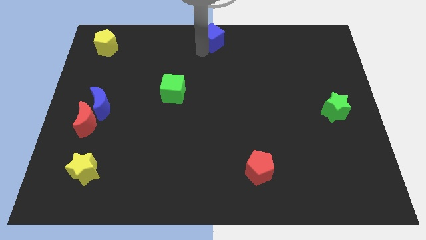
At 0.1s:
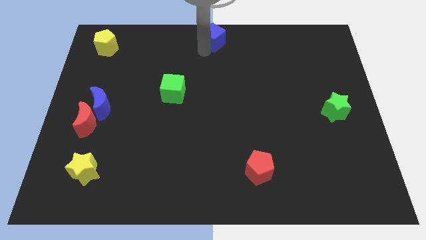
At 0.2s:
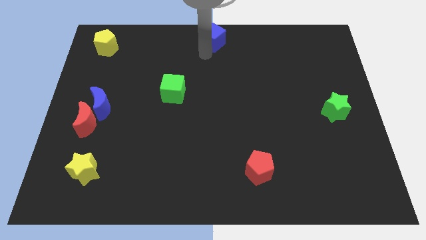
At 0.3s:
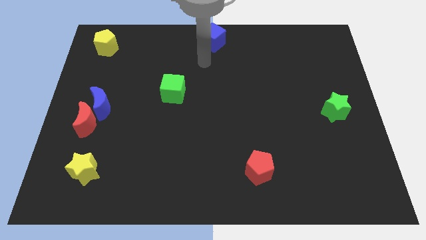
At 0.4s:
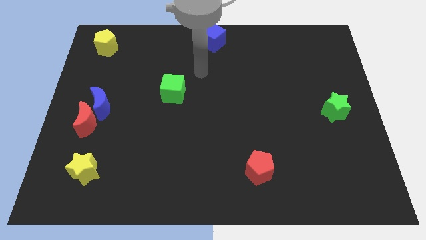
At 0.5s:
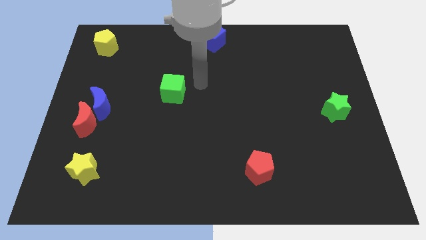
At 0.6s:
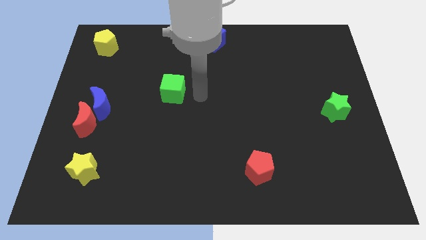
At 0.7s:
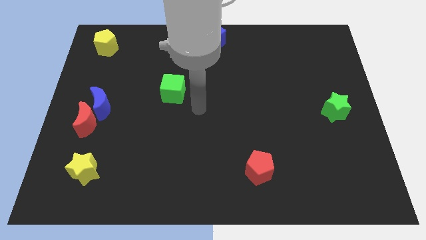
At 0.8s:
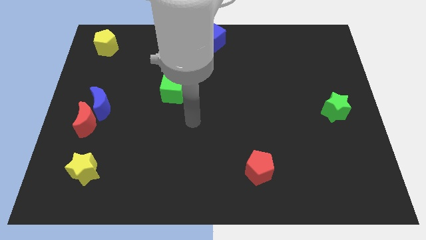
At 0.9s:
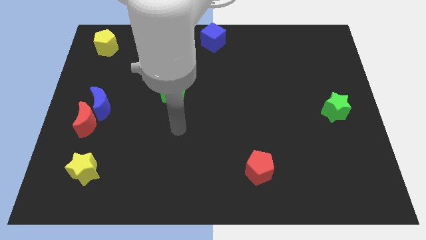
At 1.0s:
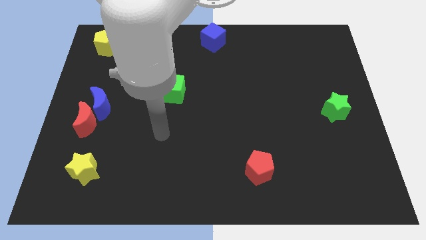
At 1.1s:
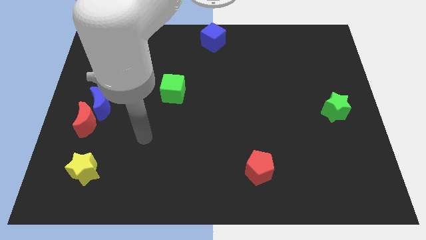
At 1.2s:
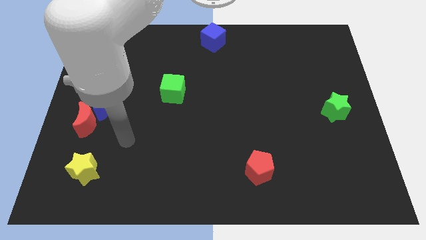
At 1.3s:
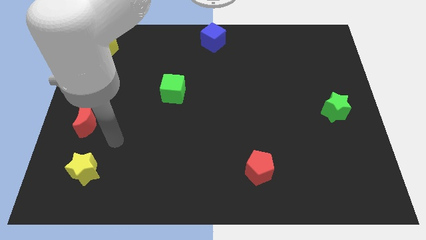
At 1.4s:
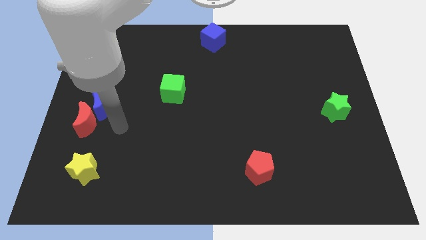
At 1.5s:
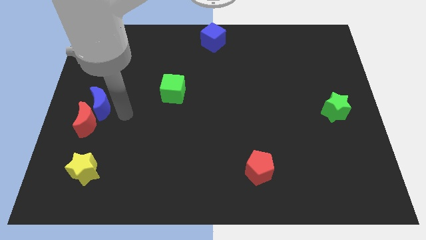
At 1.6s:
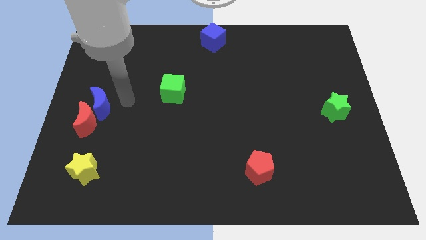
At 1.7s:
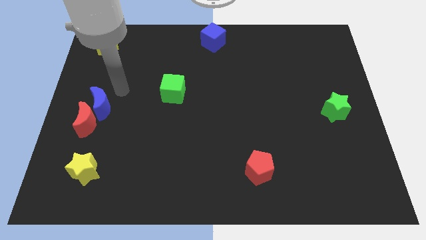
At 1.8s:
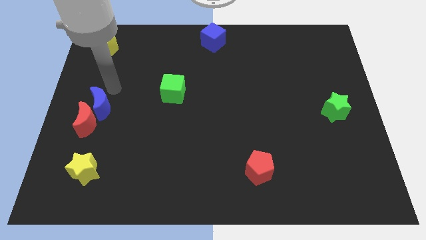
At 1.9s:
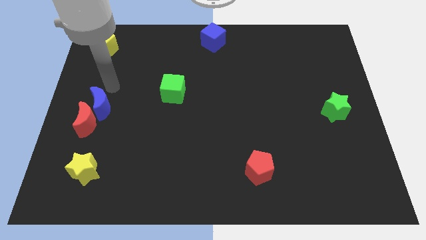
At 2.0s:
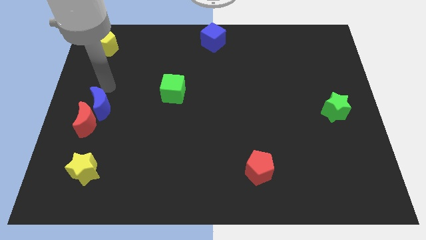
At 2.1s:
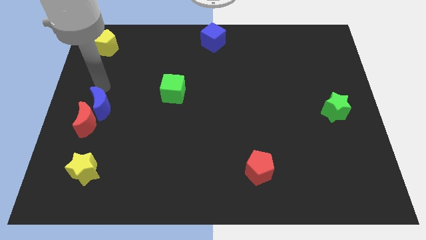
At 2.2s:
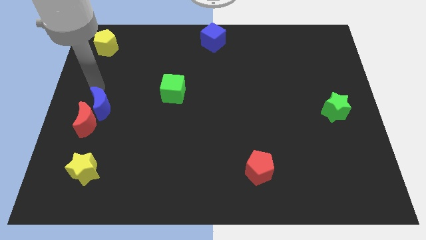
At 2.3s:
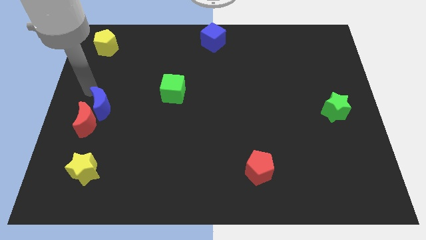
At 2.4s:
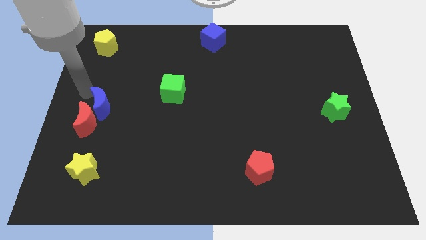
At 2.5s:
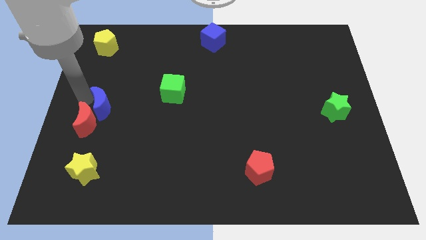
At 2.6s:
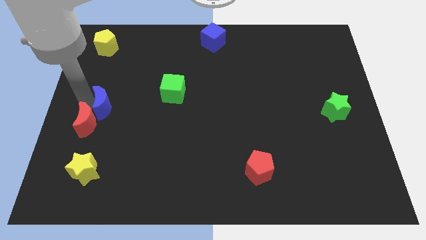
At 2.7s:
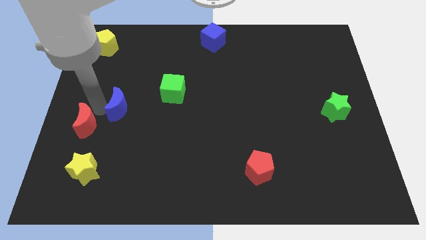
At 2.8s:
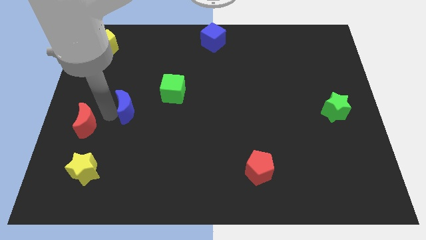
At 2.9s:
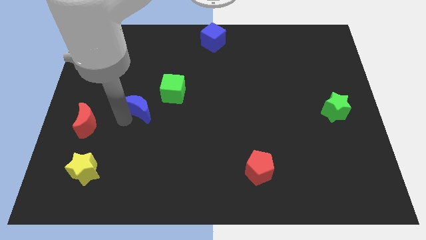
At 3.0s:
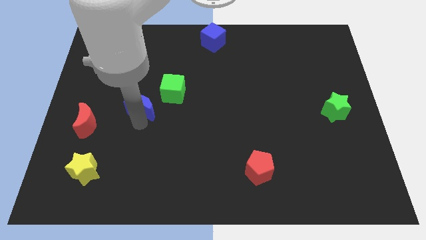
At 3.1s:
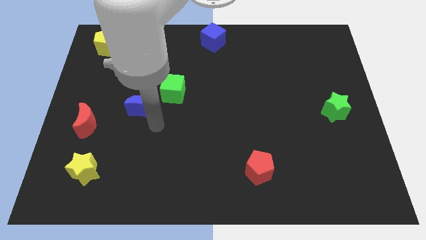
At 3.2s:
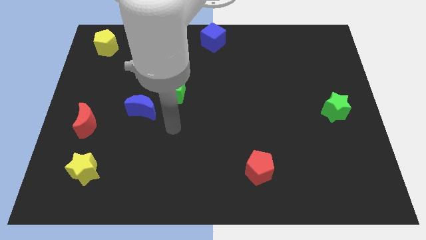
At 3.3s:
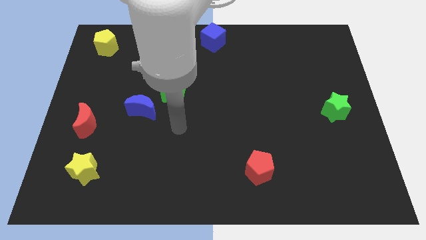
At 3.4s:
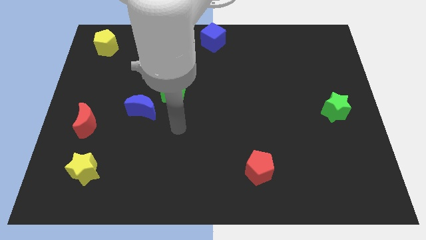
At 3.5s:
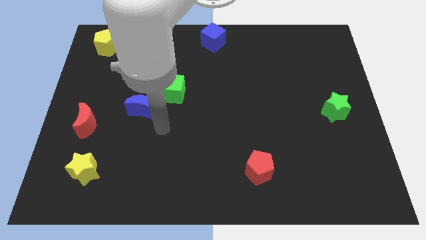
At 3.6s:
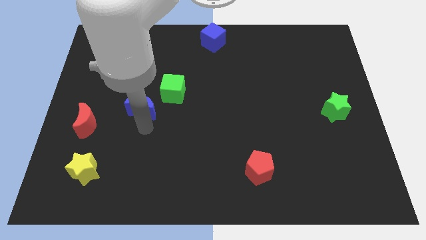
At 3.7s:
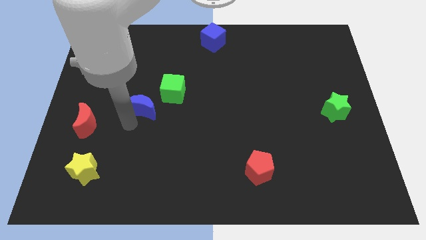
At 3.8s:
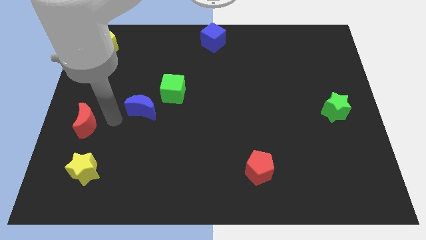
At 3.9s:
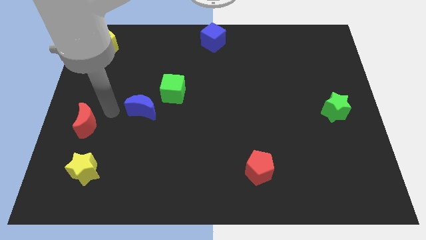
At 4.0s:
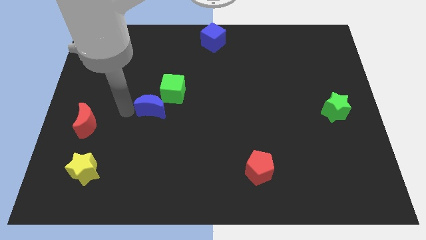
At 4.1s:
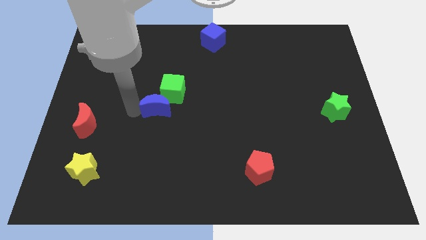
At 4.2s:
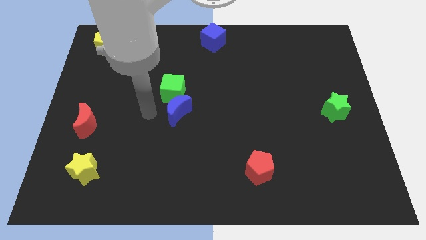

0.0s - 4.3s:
place blue moon to the bottom right of green cube

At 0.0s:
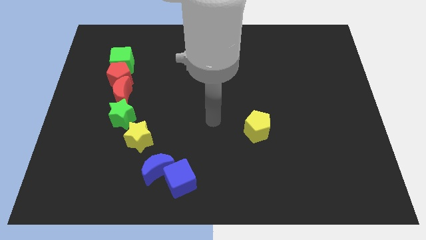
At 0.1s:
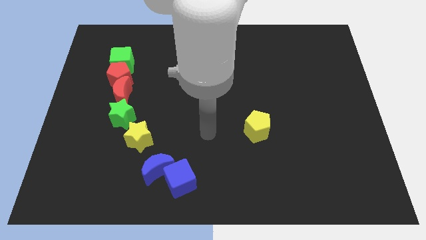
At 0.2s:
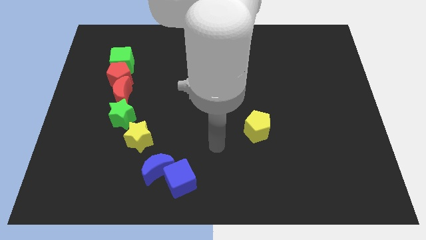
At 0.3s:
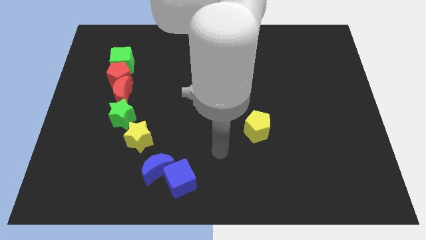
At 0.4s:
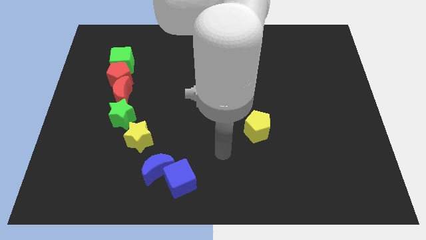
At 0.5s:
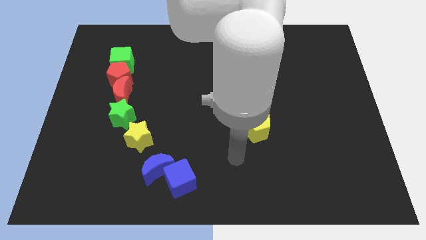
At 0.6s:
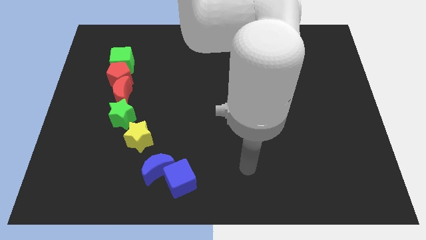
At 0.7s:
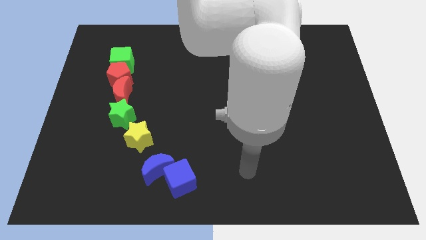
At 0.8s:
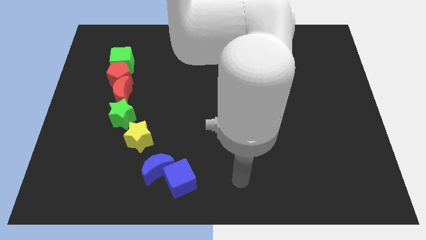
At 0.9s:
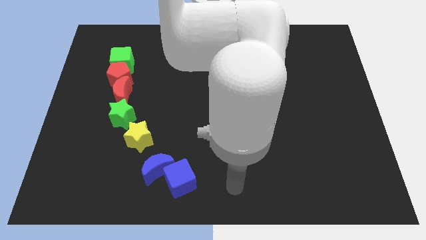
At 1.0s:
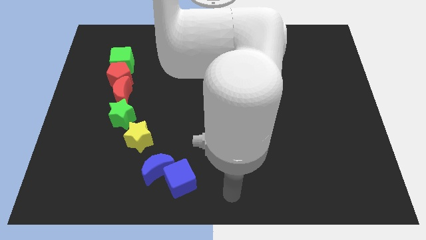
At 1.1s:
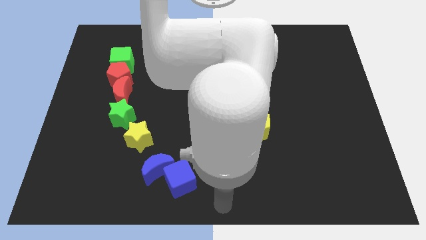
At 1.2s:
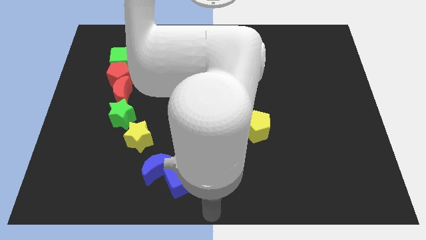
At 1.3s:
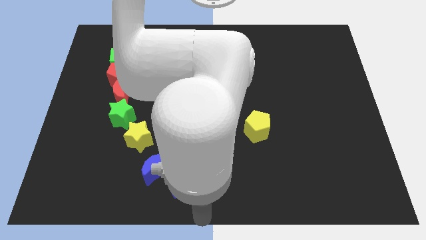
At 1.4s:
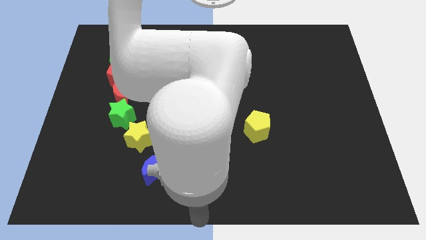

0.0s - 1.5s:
point your arm at the bottom center of the board

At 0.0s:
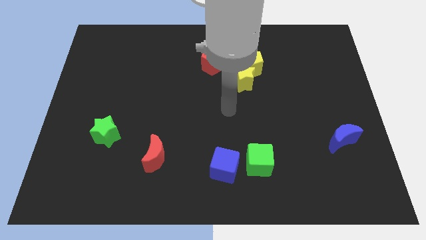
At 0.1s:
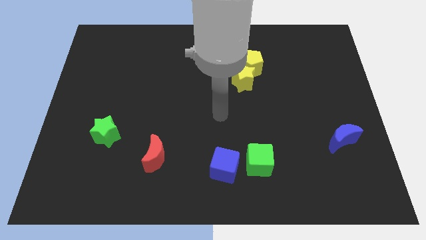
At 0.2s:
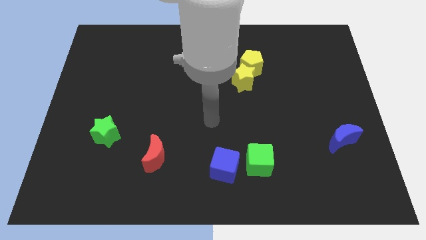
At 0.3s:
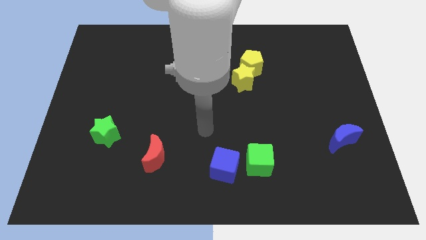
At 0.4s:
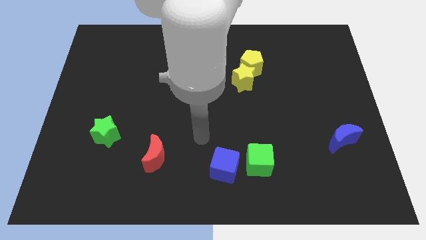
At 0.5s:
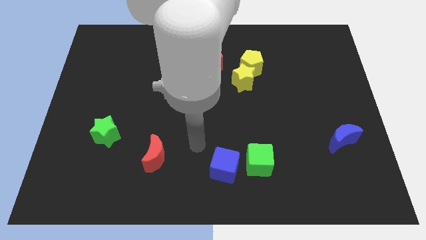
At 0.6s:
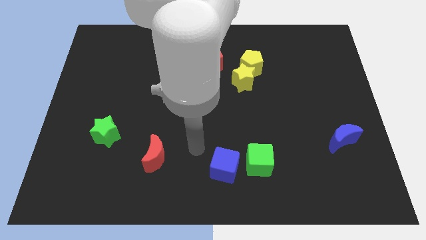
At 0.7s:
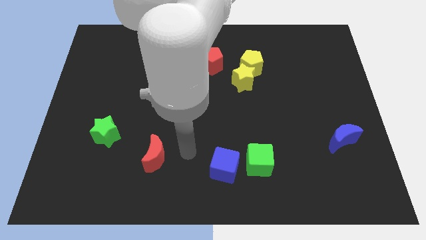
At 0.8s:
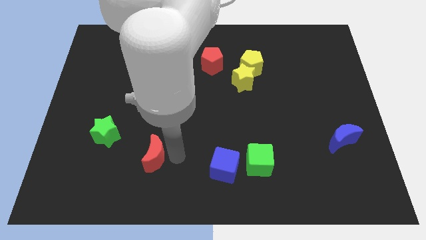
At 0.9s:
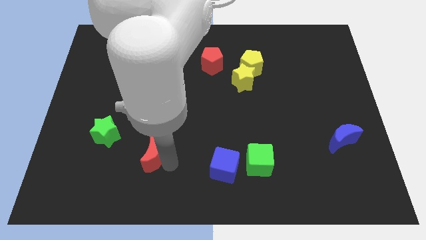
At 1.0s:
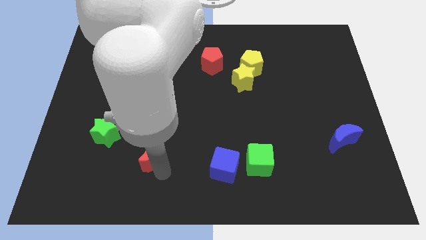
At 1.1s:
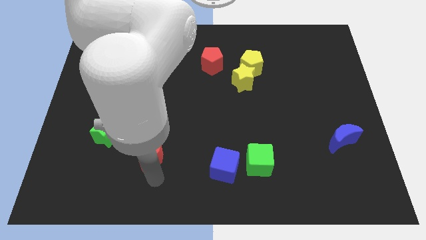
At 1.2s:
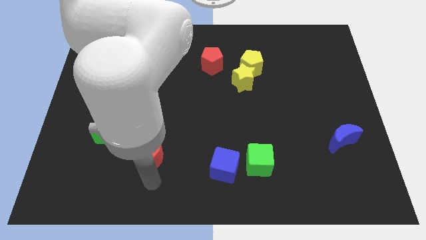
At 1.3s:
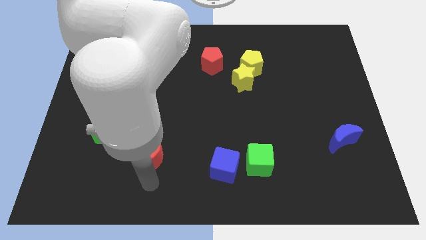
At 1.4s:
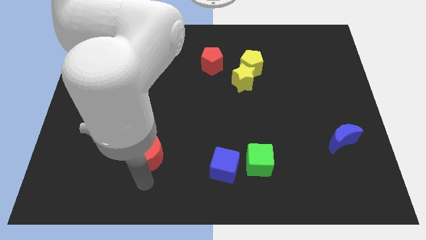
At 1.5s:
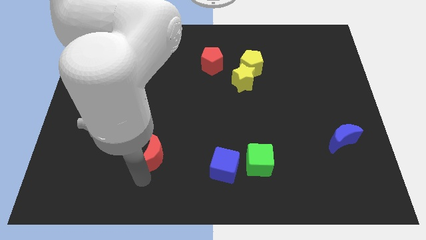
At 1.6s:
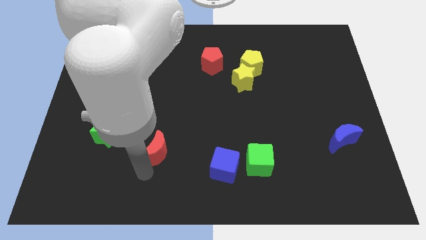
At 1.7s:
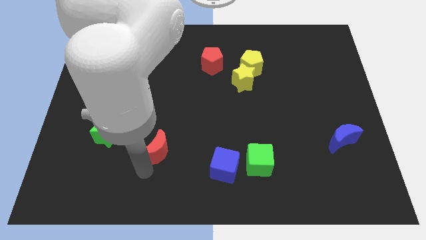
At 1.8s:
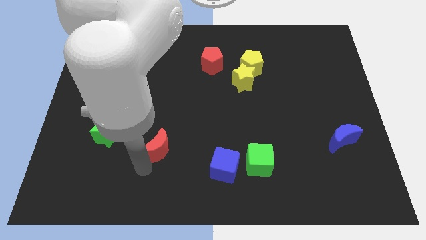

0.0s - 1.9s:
place the red moon diagonally in between the green star and blue cube

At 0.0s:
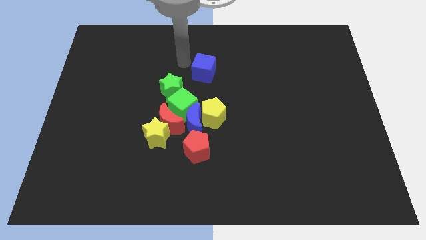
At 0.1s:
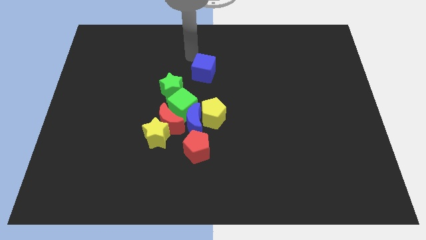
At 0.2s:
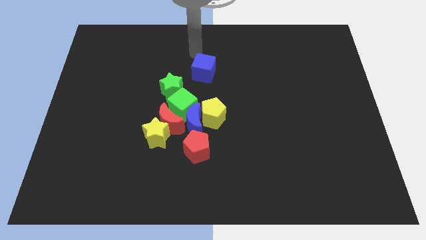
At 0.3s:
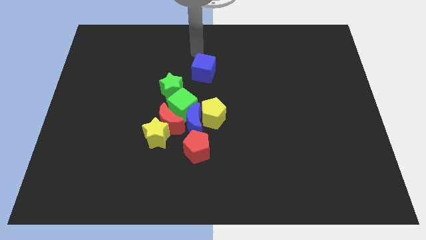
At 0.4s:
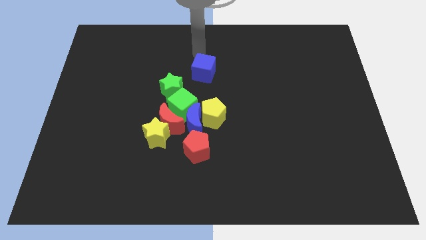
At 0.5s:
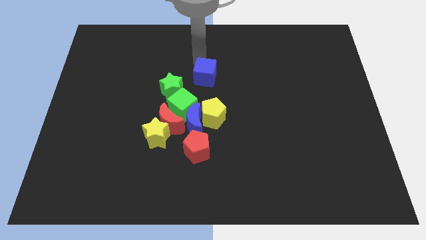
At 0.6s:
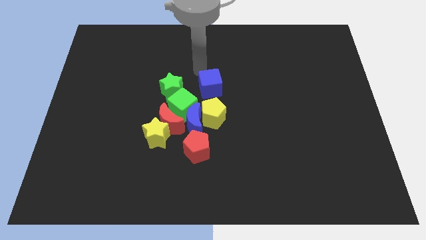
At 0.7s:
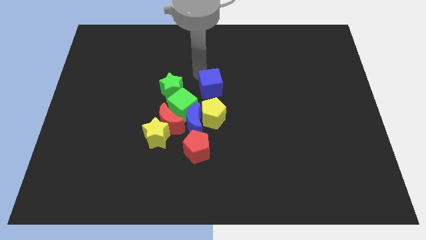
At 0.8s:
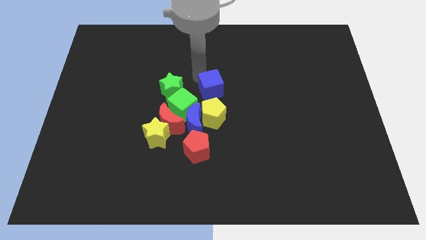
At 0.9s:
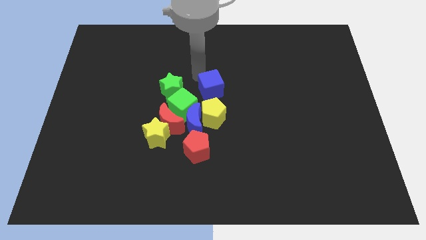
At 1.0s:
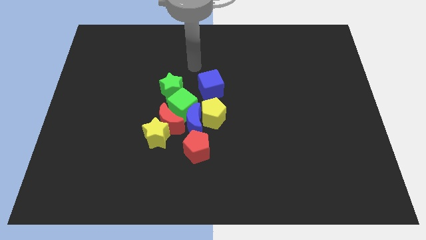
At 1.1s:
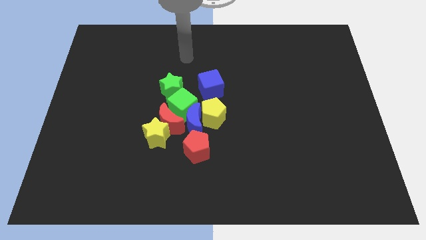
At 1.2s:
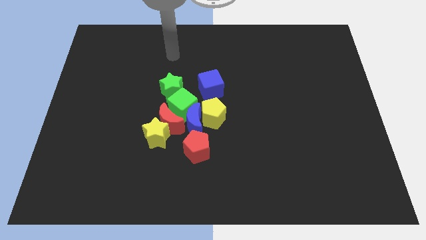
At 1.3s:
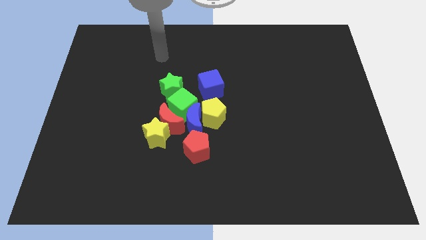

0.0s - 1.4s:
push the blue cube towards yellow pentagon
